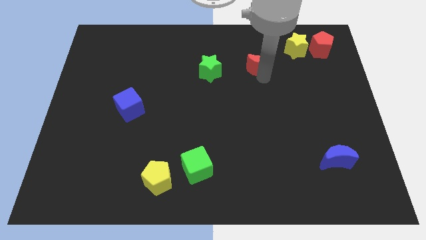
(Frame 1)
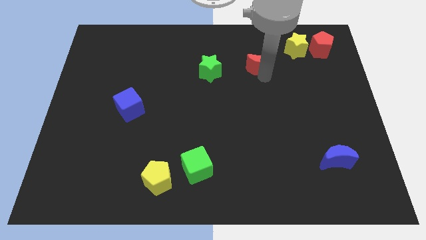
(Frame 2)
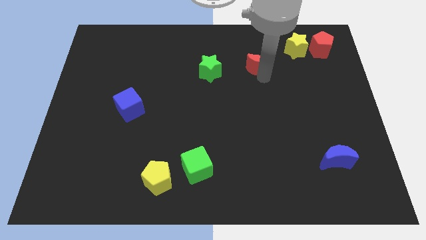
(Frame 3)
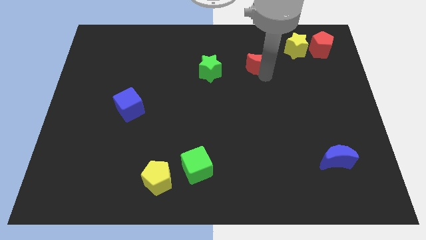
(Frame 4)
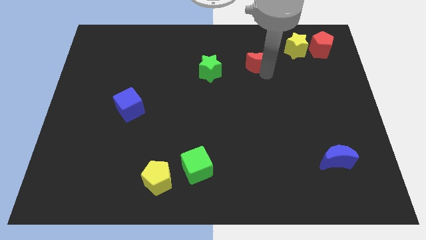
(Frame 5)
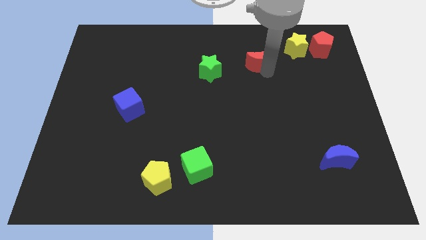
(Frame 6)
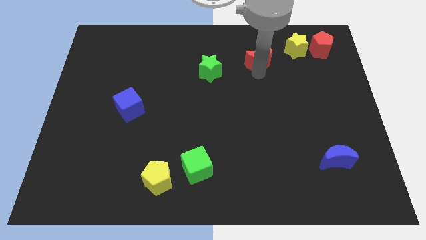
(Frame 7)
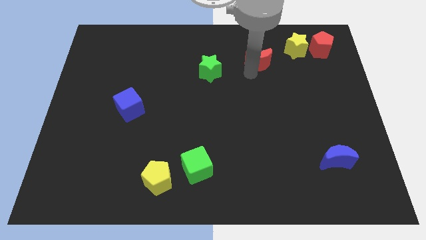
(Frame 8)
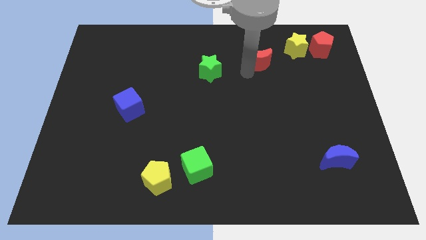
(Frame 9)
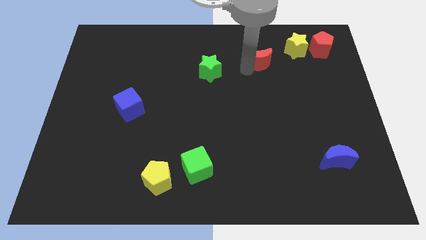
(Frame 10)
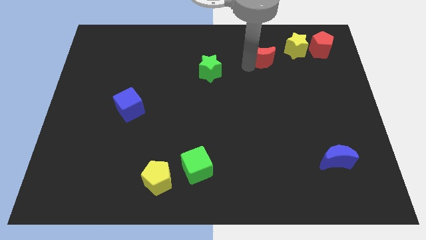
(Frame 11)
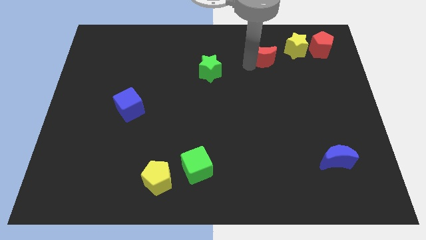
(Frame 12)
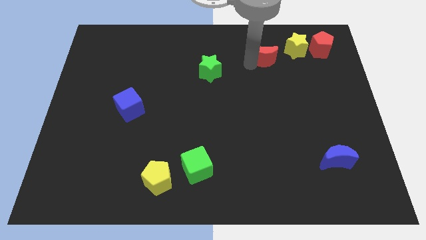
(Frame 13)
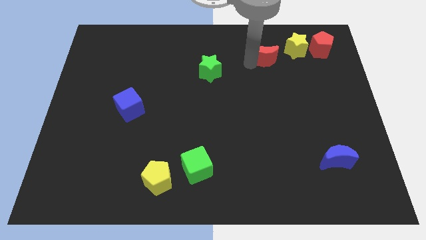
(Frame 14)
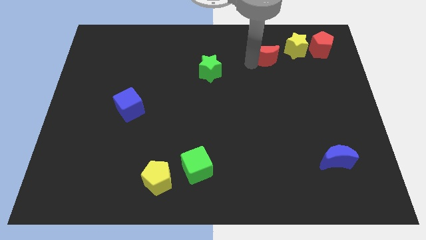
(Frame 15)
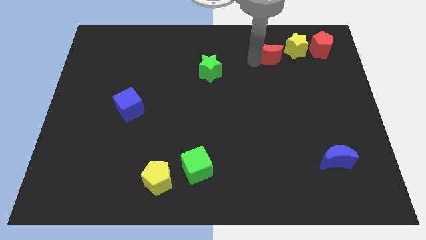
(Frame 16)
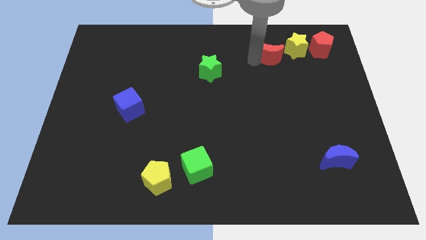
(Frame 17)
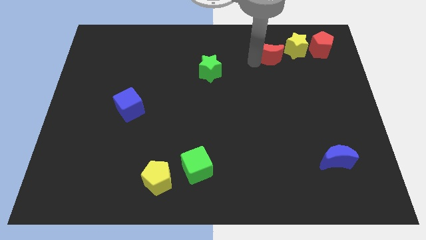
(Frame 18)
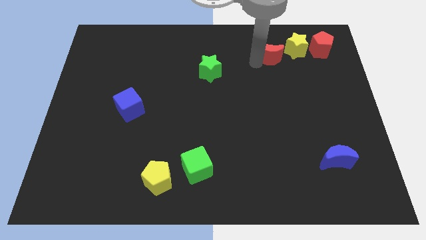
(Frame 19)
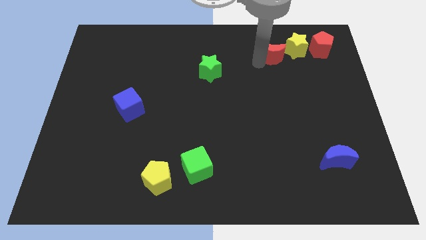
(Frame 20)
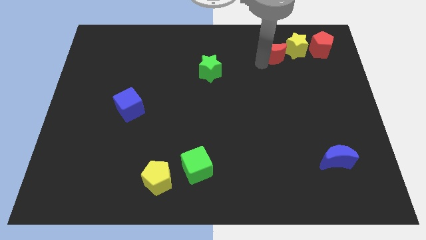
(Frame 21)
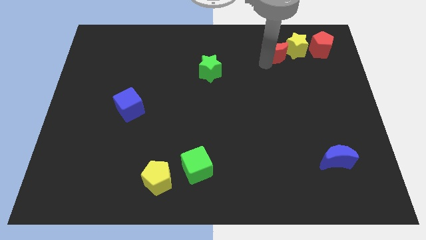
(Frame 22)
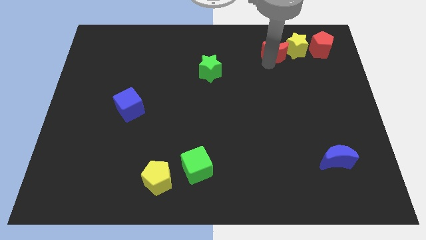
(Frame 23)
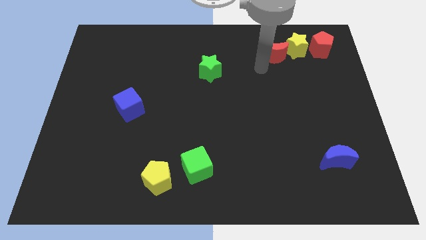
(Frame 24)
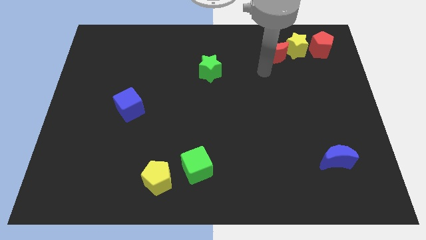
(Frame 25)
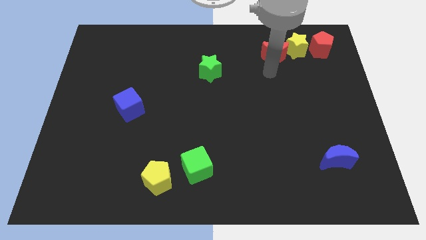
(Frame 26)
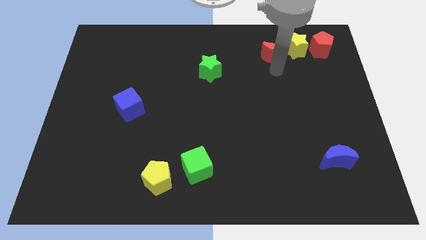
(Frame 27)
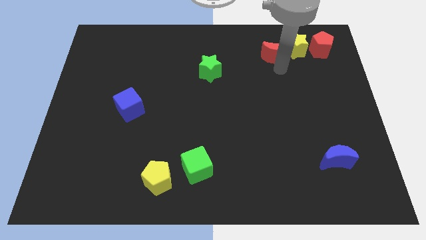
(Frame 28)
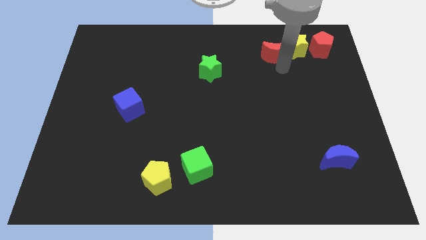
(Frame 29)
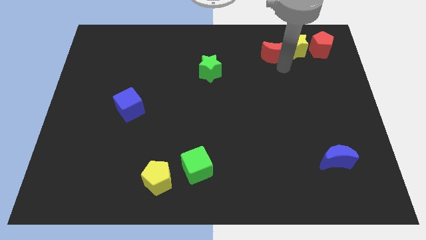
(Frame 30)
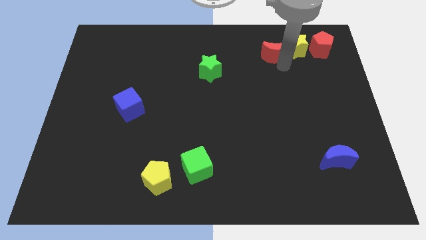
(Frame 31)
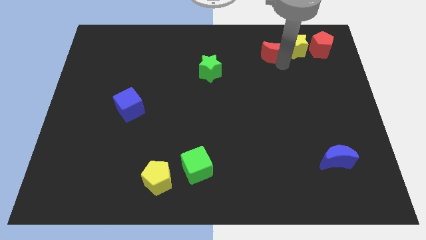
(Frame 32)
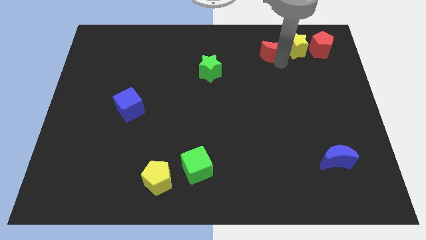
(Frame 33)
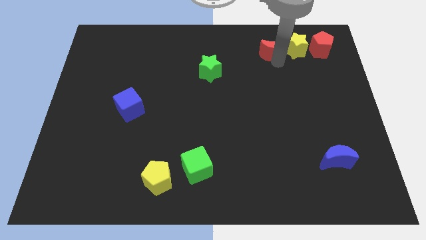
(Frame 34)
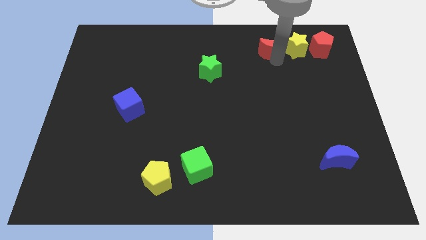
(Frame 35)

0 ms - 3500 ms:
push the red crescent into the left side of the yellow star

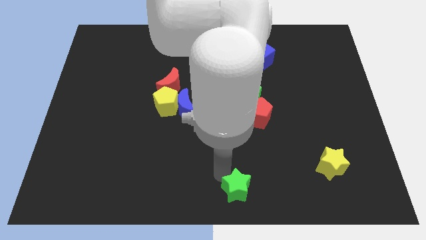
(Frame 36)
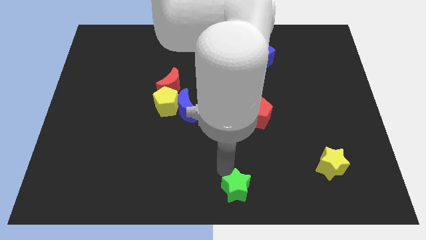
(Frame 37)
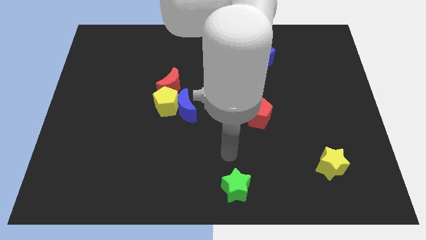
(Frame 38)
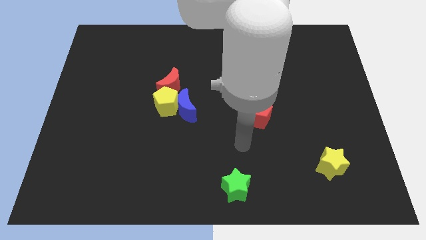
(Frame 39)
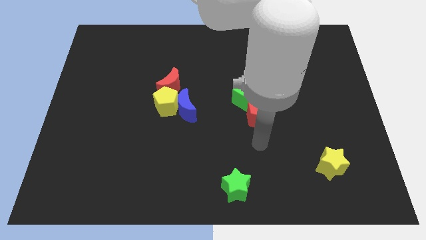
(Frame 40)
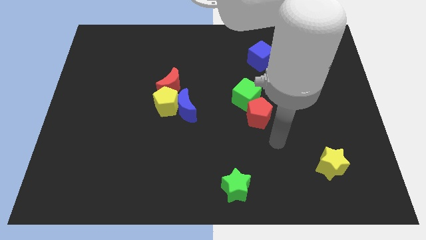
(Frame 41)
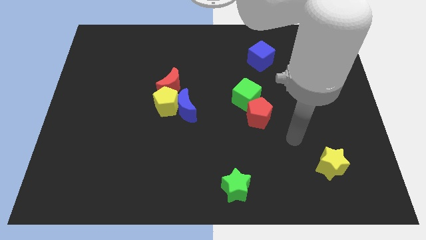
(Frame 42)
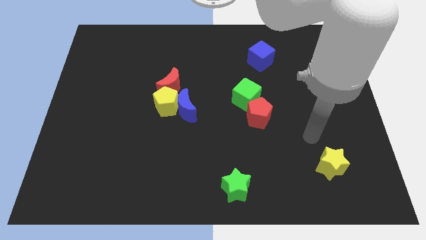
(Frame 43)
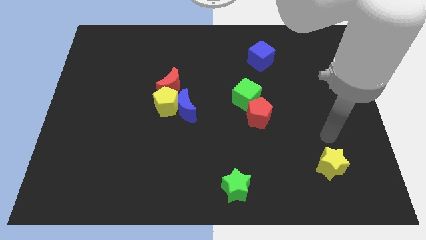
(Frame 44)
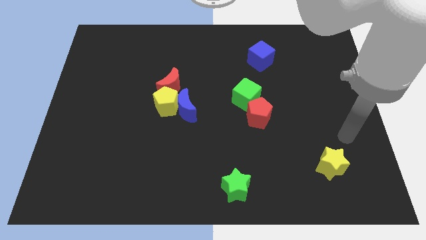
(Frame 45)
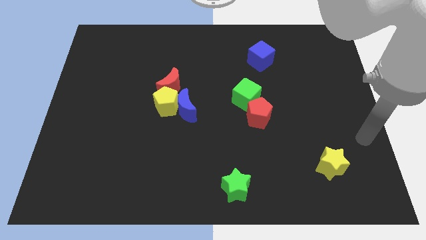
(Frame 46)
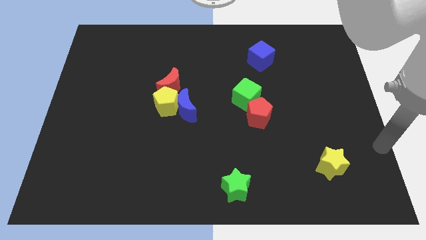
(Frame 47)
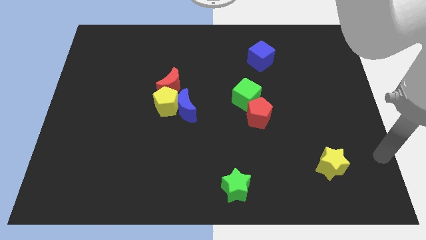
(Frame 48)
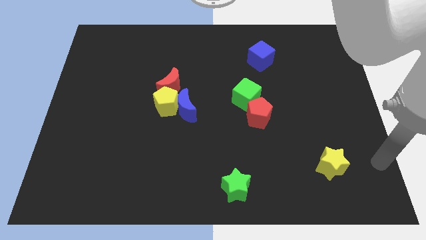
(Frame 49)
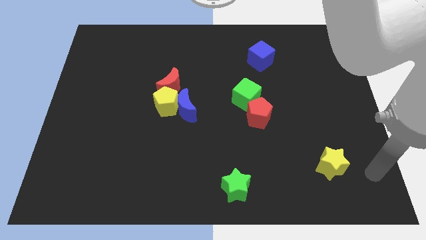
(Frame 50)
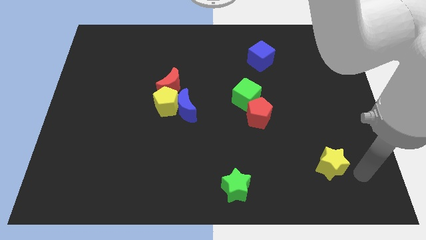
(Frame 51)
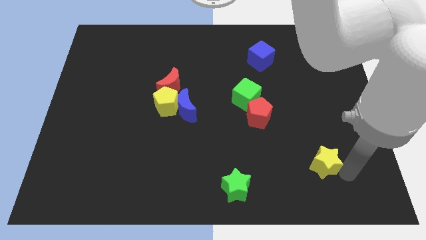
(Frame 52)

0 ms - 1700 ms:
move your arm away from green star

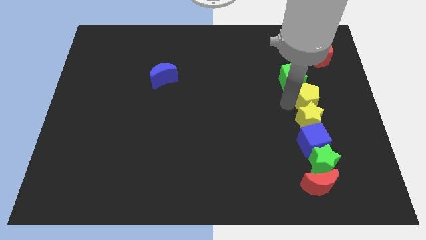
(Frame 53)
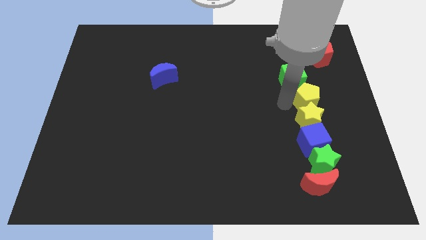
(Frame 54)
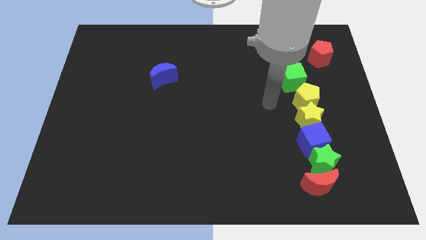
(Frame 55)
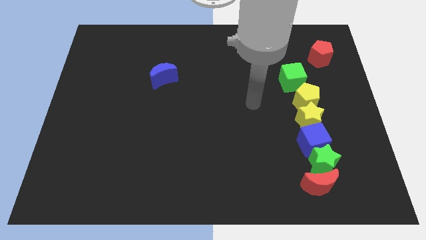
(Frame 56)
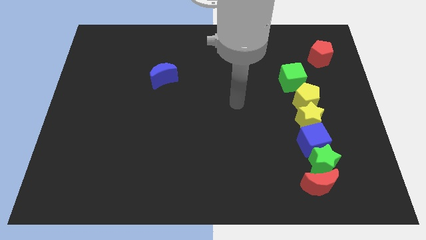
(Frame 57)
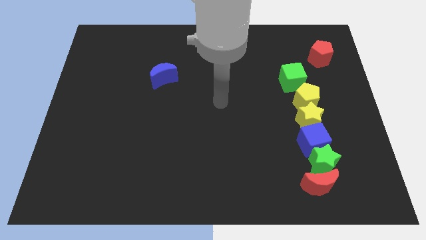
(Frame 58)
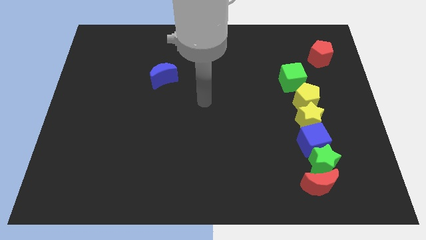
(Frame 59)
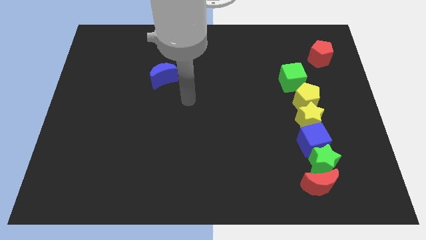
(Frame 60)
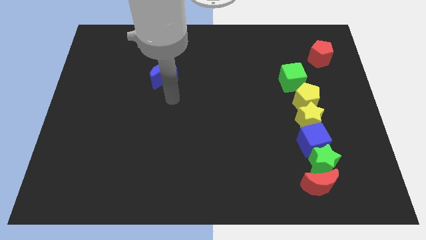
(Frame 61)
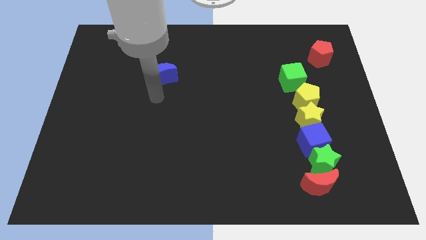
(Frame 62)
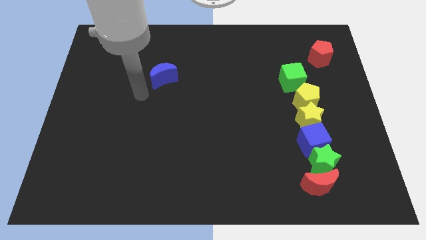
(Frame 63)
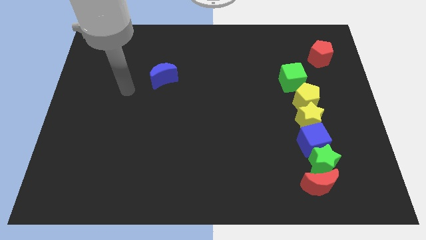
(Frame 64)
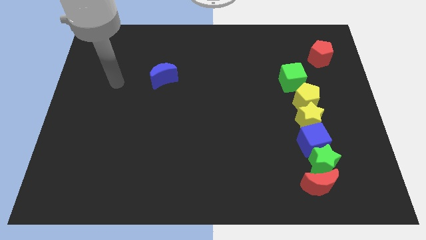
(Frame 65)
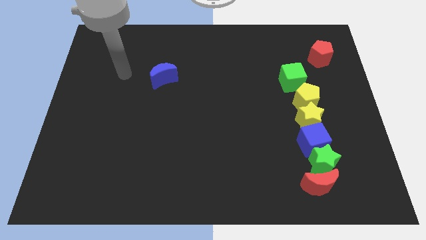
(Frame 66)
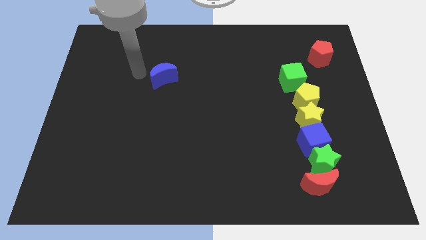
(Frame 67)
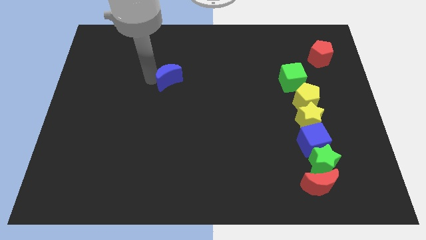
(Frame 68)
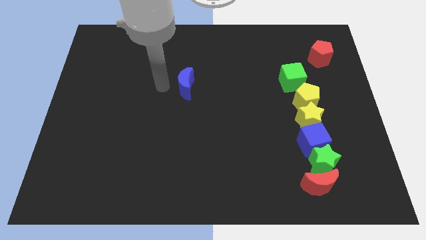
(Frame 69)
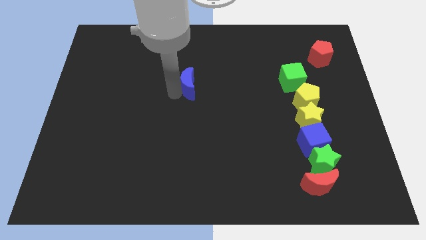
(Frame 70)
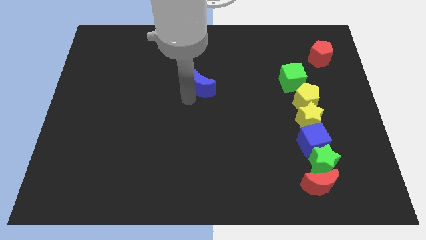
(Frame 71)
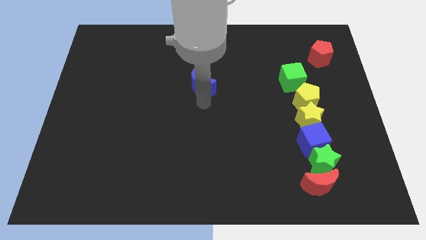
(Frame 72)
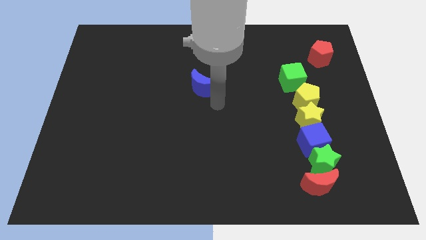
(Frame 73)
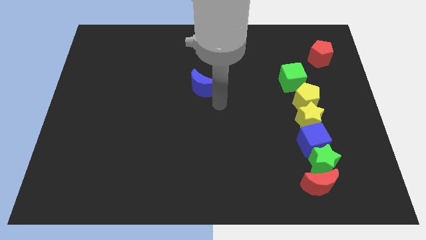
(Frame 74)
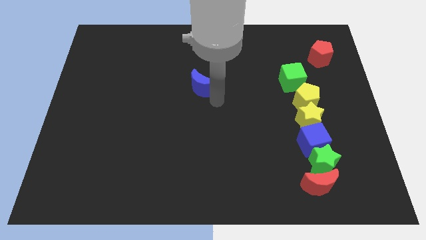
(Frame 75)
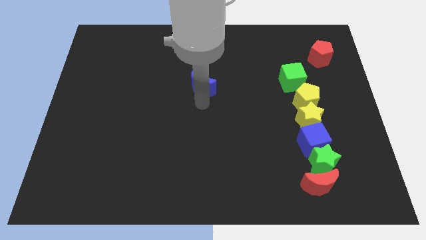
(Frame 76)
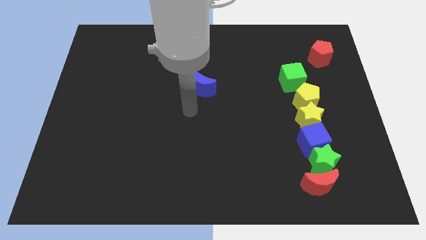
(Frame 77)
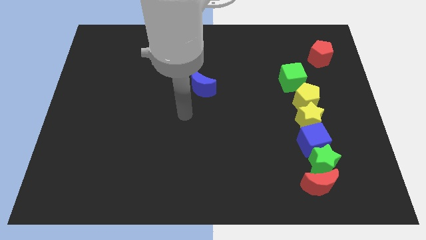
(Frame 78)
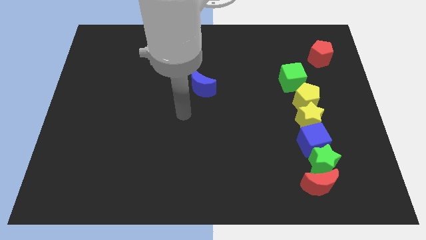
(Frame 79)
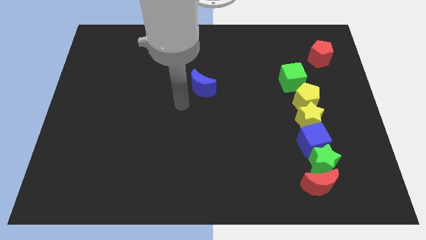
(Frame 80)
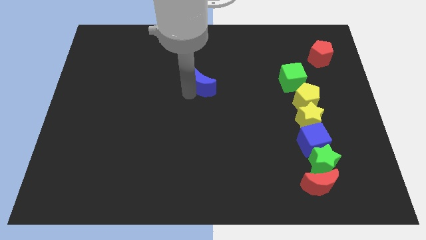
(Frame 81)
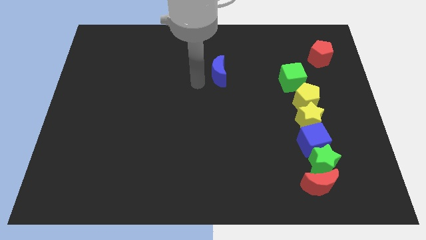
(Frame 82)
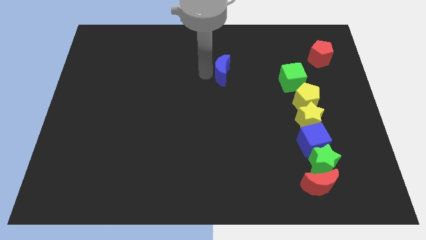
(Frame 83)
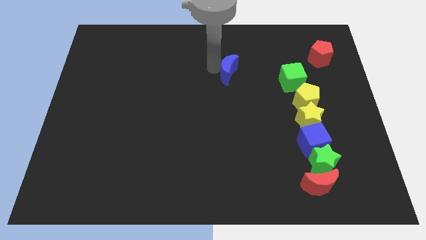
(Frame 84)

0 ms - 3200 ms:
push the blue moon closer to the green cube

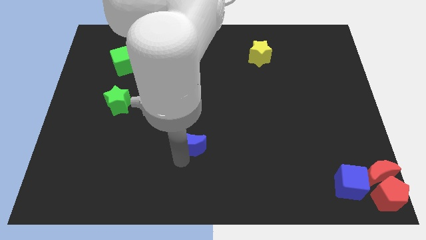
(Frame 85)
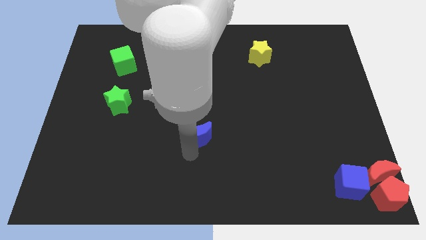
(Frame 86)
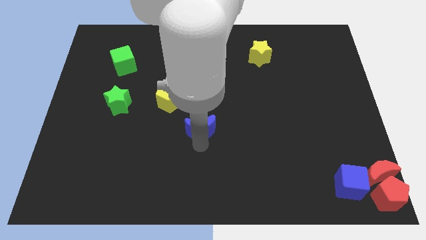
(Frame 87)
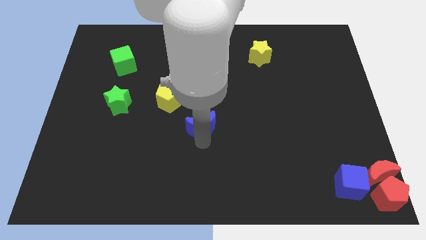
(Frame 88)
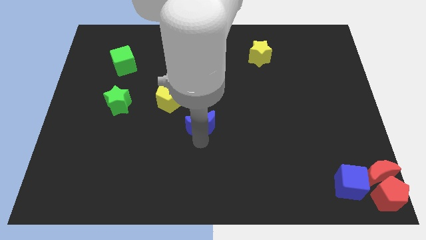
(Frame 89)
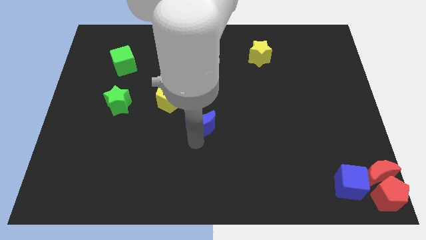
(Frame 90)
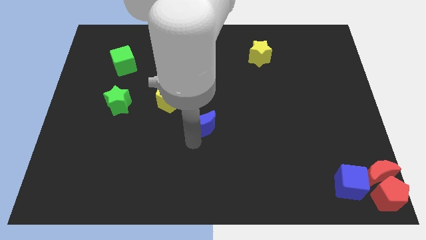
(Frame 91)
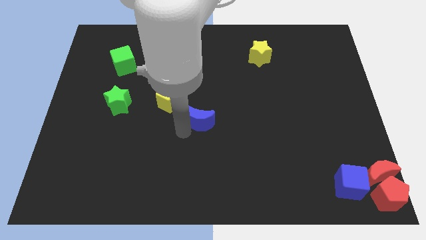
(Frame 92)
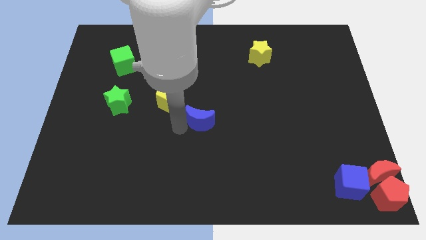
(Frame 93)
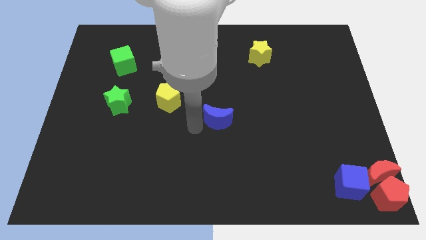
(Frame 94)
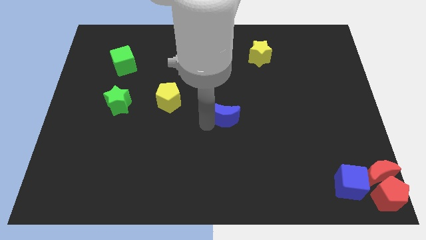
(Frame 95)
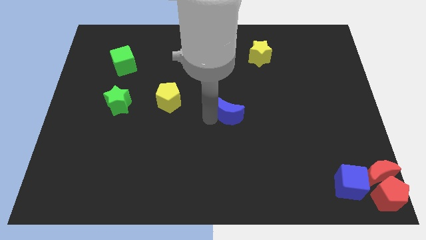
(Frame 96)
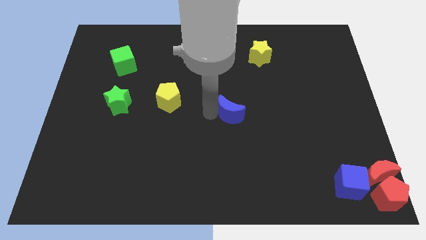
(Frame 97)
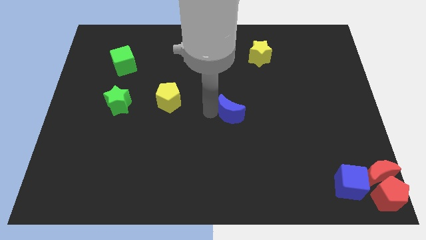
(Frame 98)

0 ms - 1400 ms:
push the blue crescent to the right of the yellow pentagon
